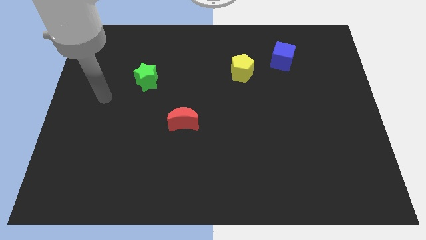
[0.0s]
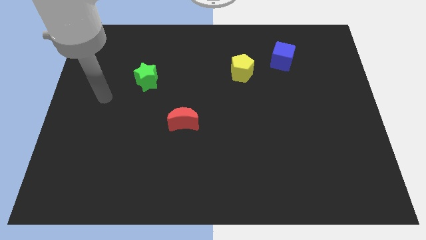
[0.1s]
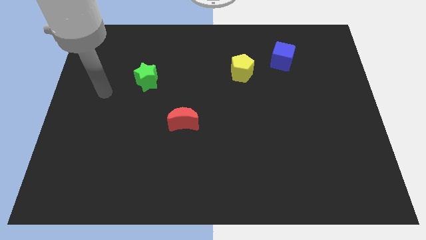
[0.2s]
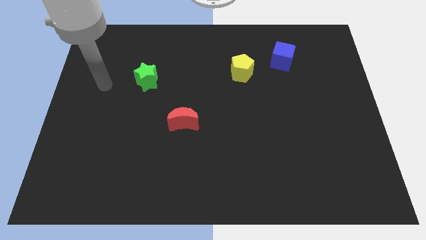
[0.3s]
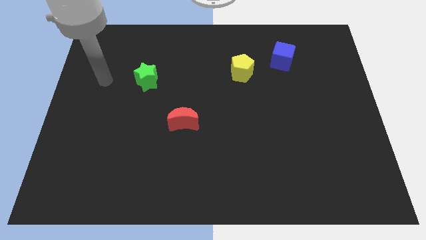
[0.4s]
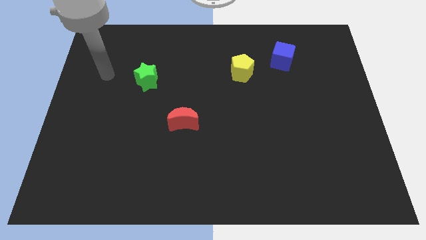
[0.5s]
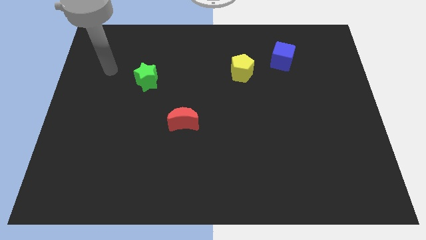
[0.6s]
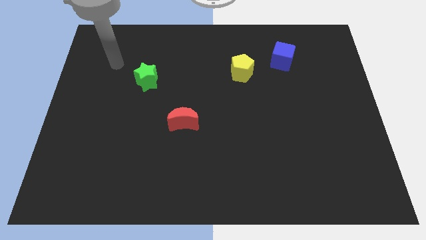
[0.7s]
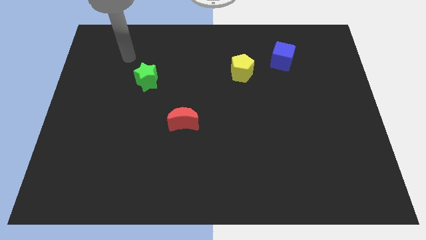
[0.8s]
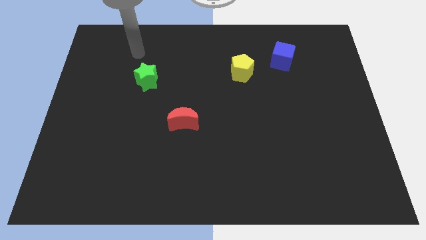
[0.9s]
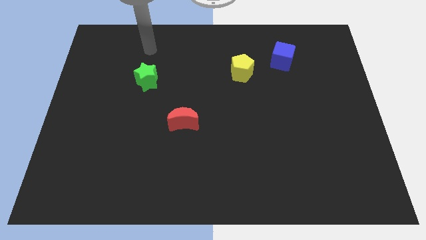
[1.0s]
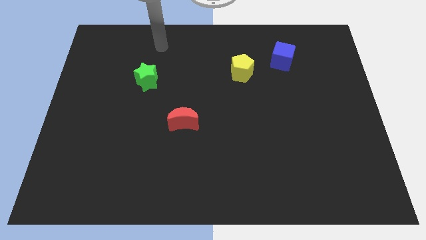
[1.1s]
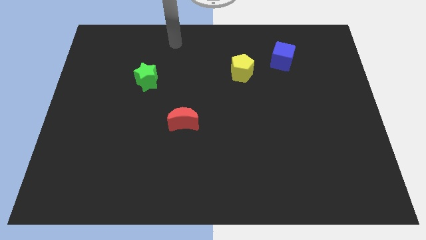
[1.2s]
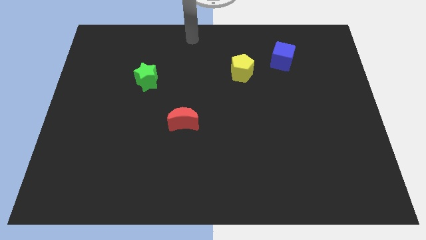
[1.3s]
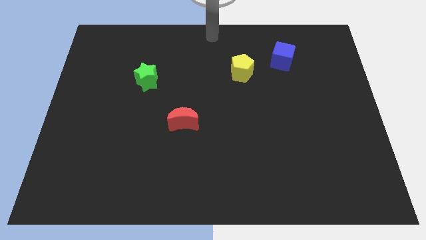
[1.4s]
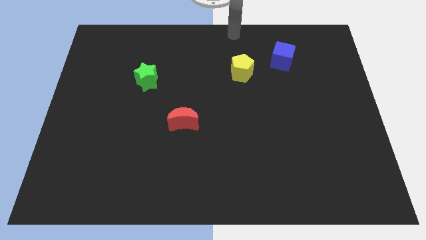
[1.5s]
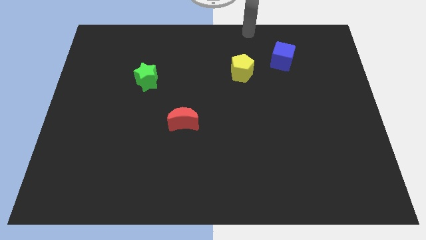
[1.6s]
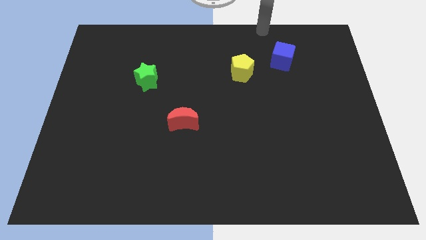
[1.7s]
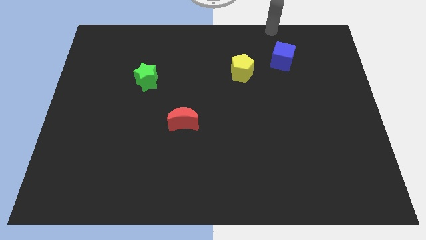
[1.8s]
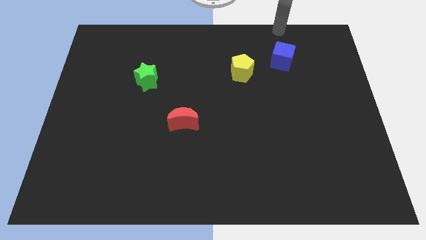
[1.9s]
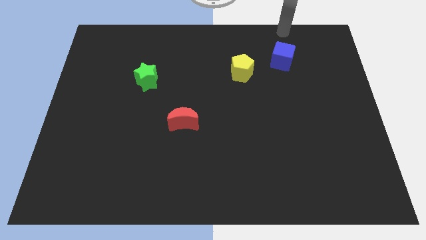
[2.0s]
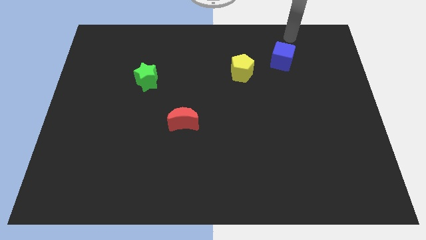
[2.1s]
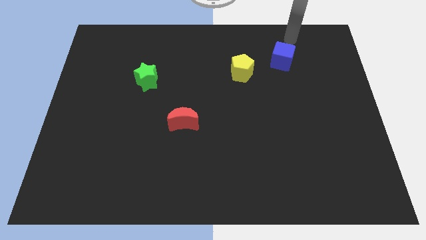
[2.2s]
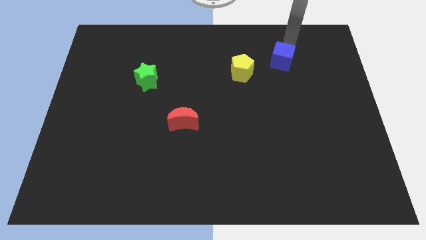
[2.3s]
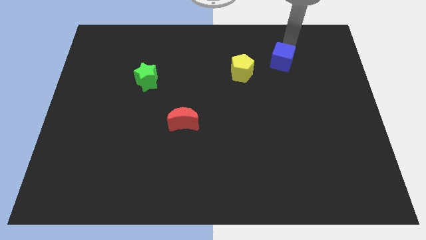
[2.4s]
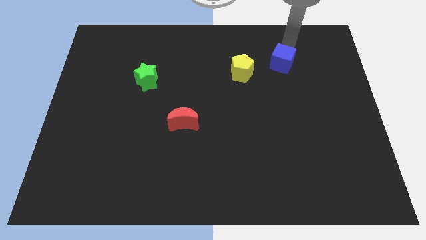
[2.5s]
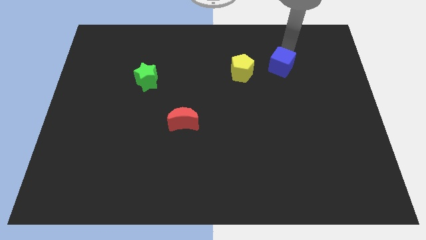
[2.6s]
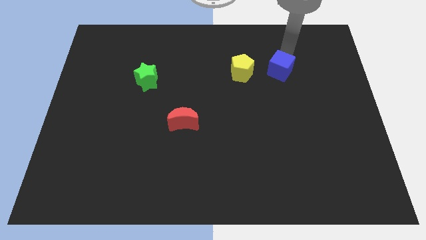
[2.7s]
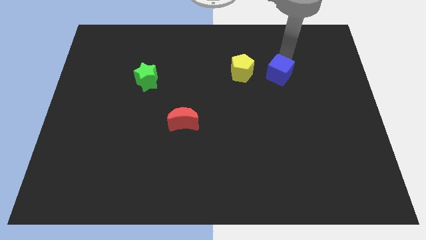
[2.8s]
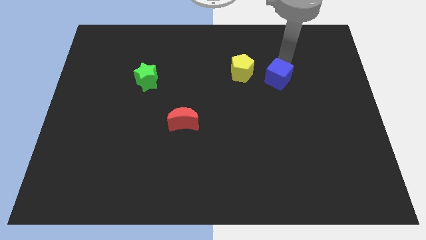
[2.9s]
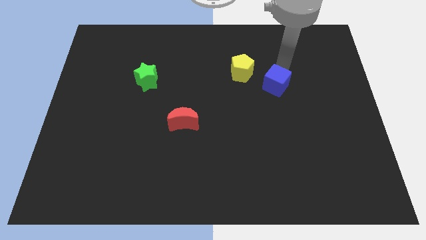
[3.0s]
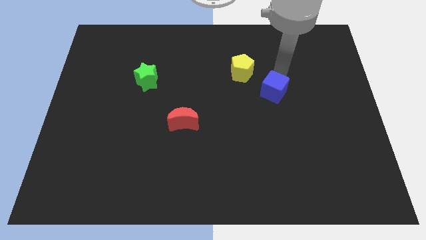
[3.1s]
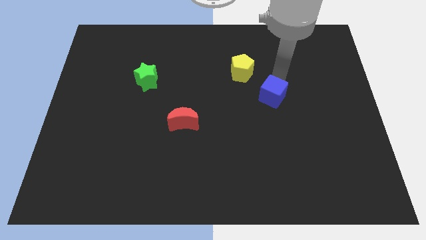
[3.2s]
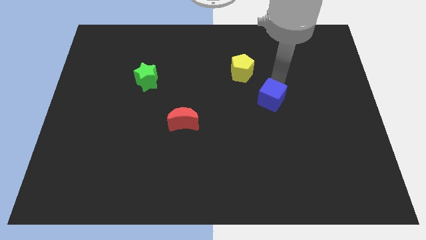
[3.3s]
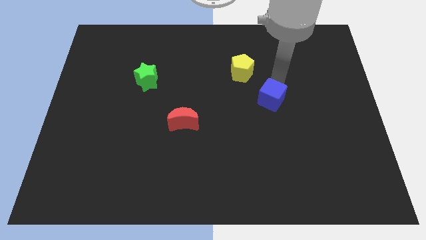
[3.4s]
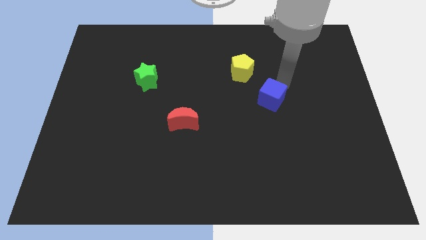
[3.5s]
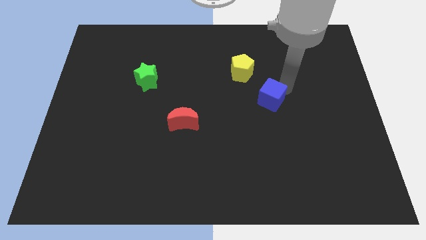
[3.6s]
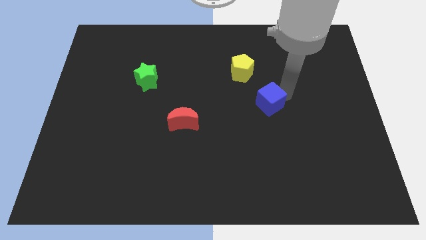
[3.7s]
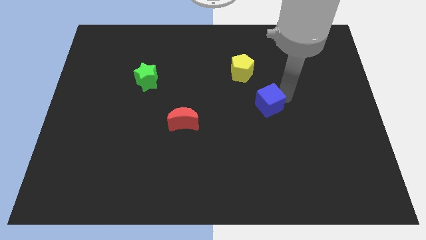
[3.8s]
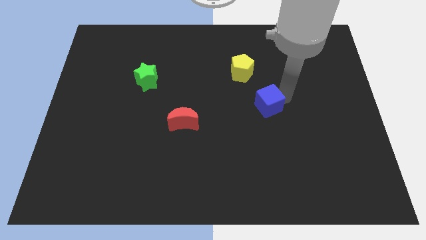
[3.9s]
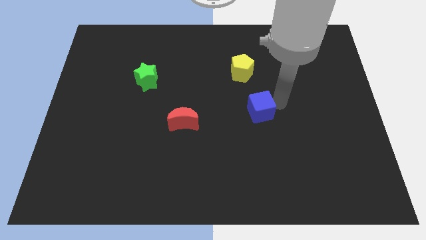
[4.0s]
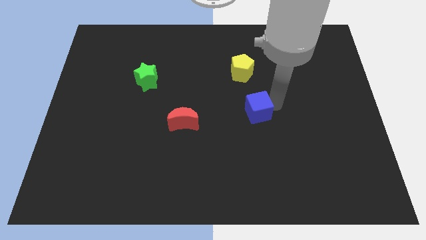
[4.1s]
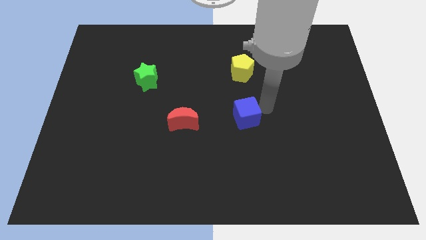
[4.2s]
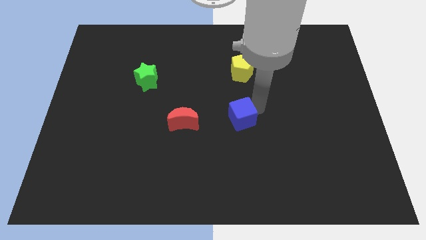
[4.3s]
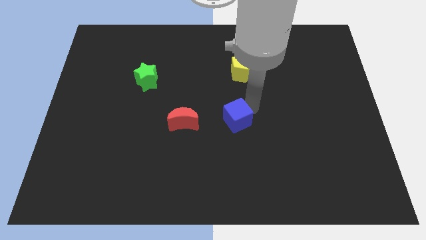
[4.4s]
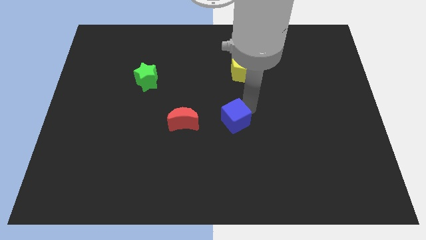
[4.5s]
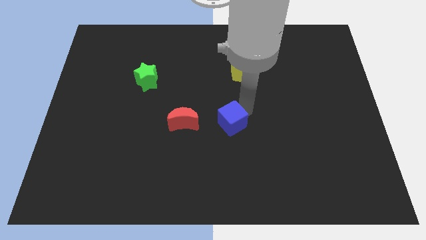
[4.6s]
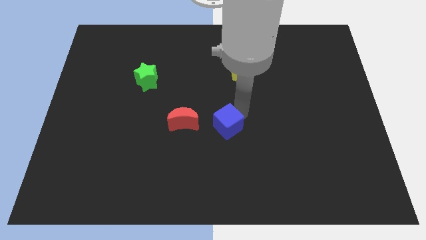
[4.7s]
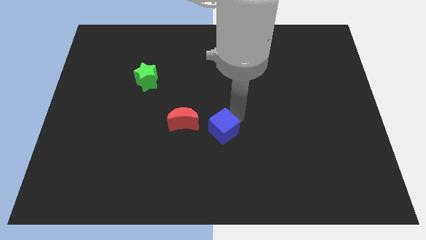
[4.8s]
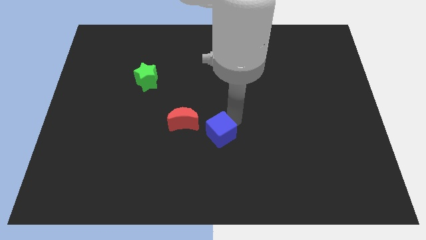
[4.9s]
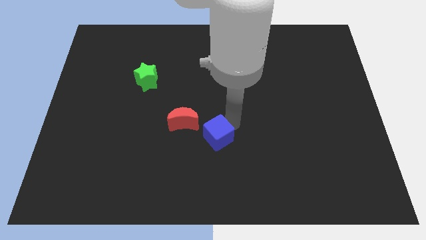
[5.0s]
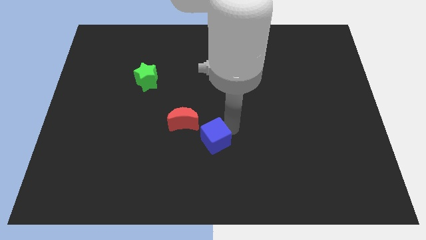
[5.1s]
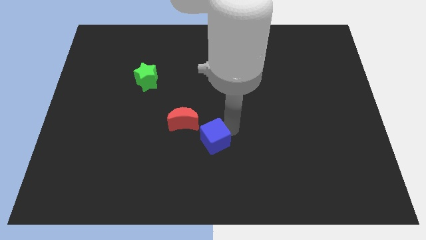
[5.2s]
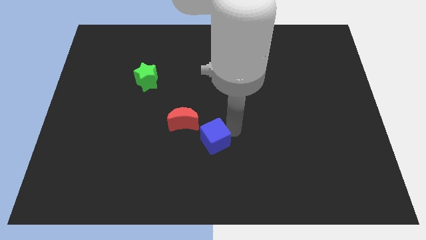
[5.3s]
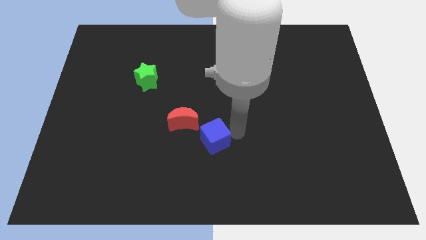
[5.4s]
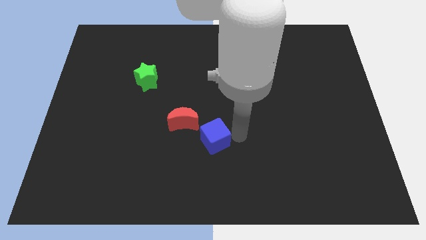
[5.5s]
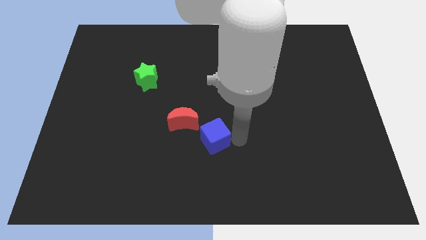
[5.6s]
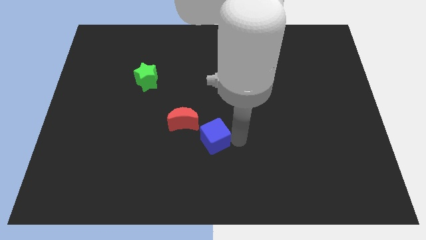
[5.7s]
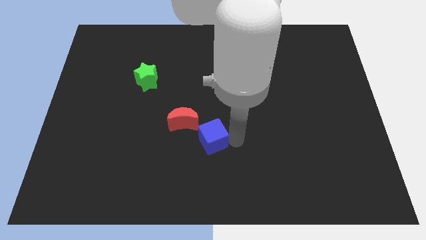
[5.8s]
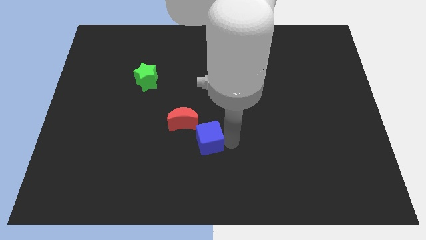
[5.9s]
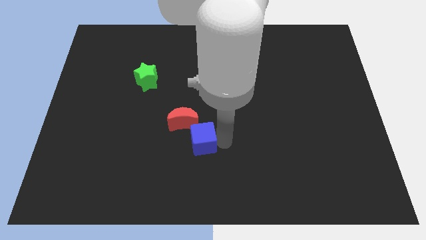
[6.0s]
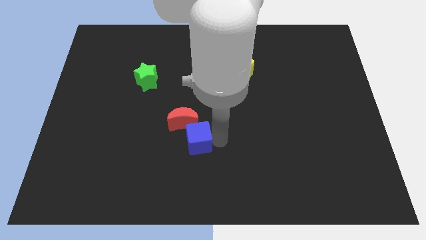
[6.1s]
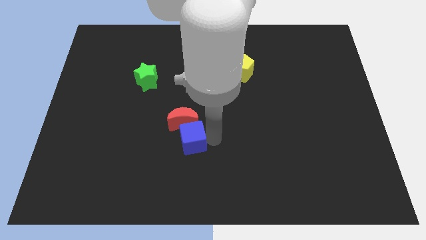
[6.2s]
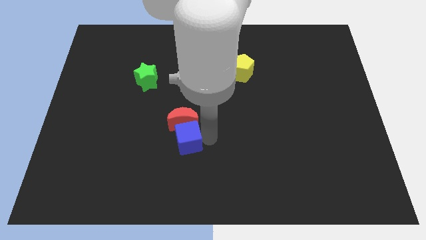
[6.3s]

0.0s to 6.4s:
slide the blue block to the moon

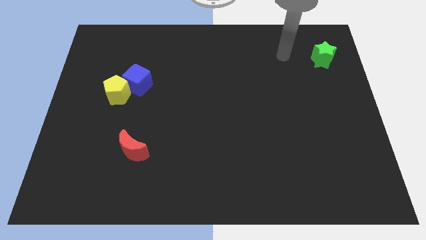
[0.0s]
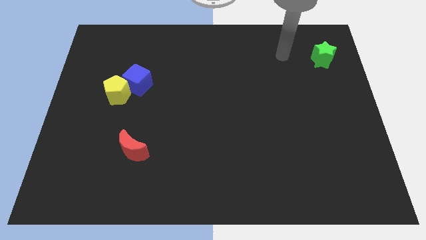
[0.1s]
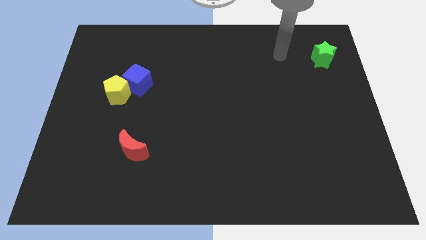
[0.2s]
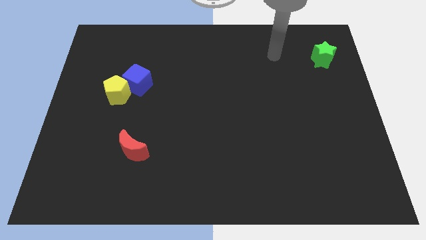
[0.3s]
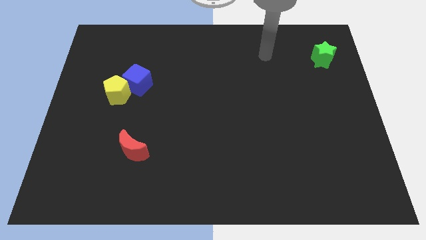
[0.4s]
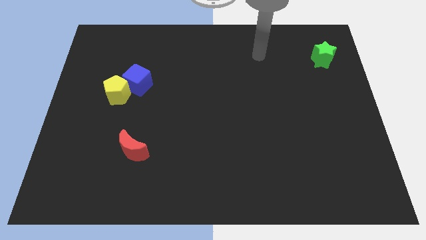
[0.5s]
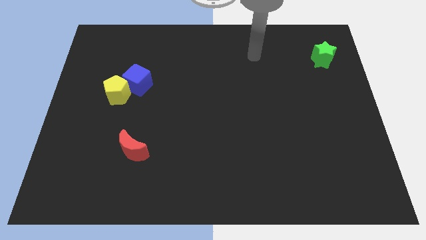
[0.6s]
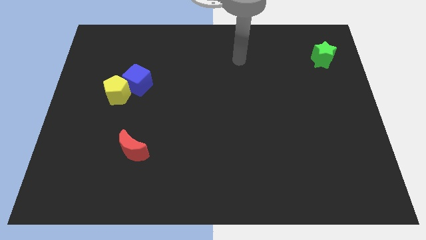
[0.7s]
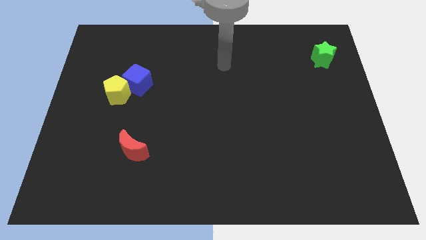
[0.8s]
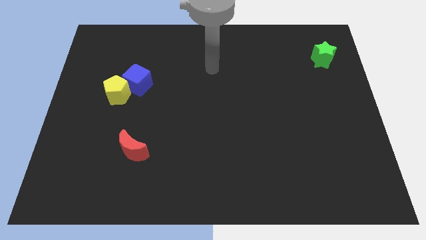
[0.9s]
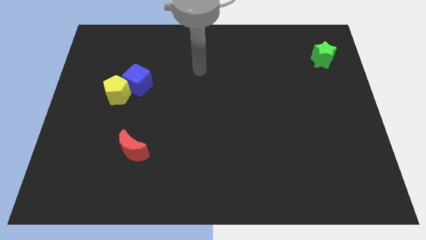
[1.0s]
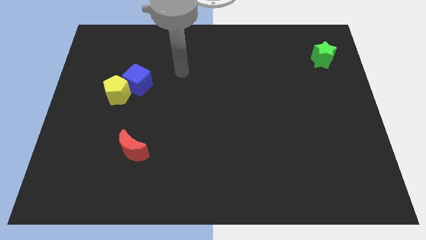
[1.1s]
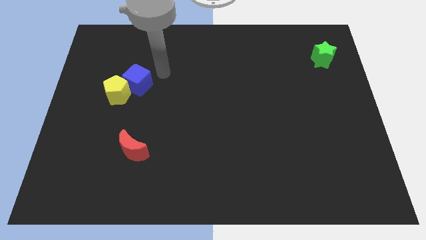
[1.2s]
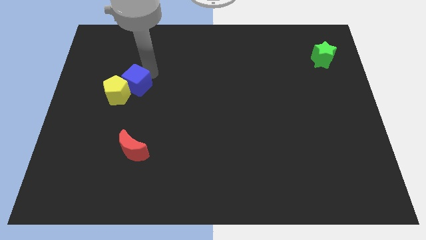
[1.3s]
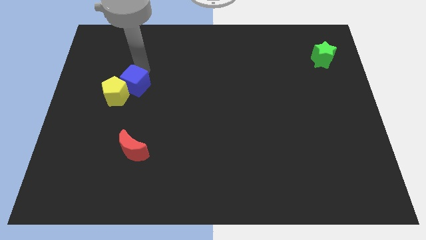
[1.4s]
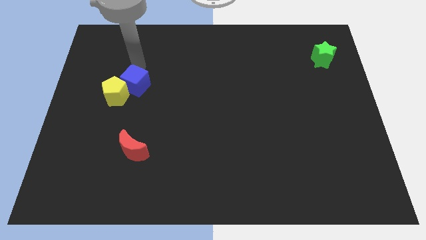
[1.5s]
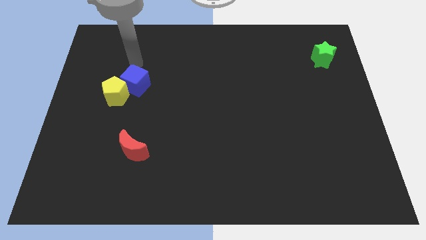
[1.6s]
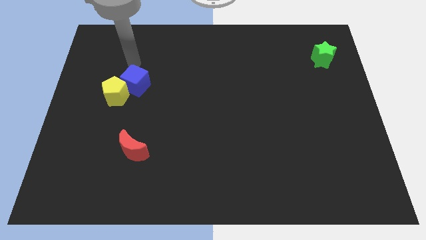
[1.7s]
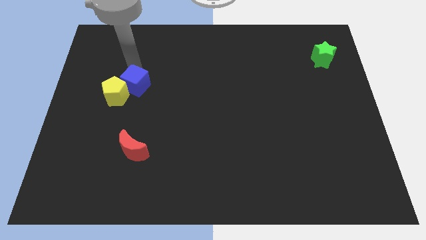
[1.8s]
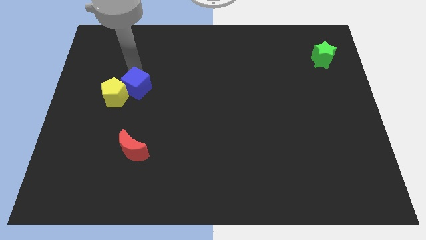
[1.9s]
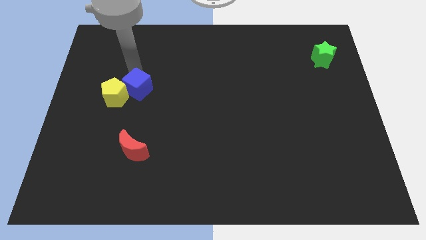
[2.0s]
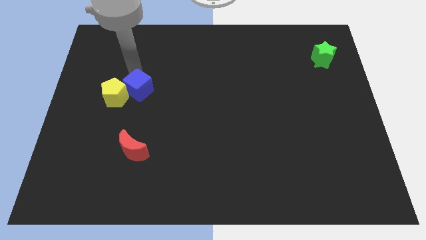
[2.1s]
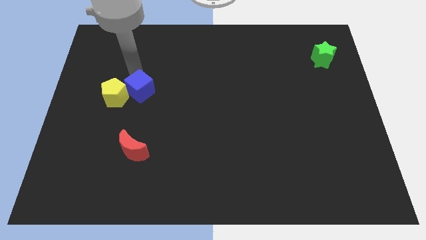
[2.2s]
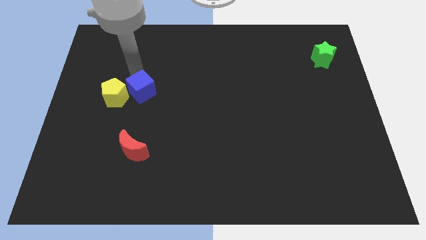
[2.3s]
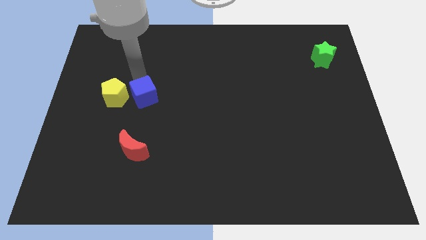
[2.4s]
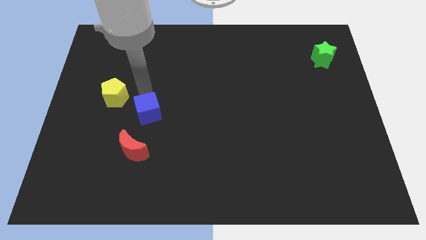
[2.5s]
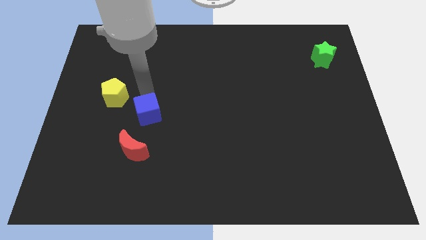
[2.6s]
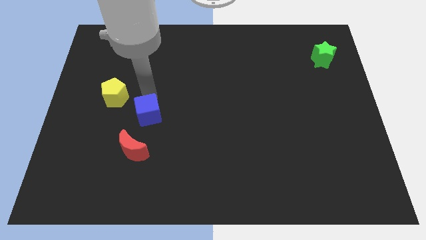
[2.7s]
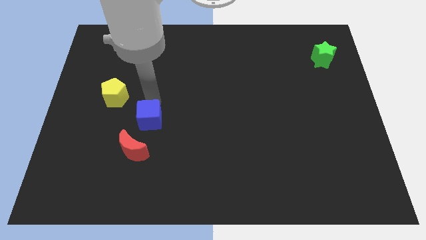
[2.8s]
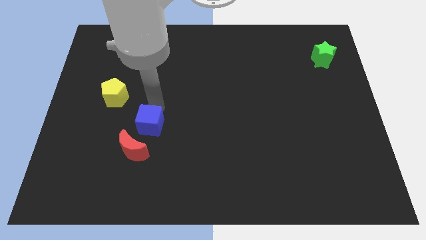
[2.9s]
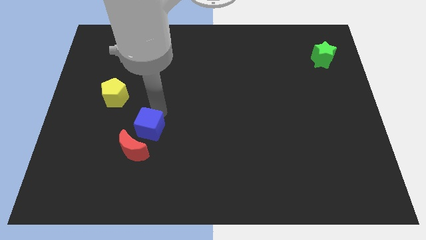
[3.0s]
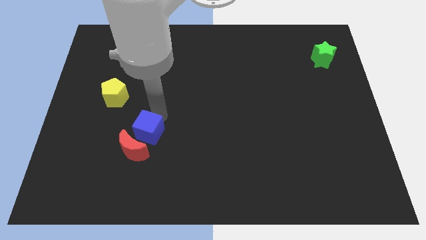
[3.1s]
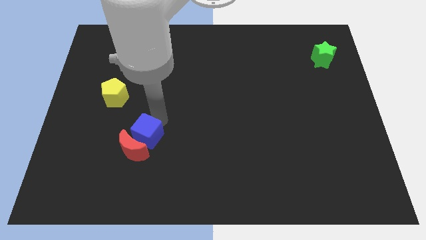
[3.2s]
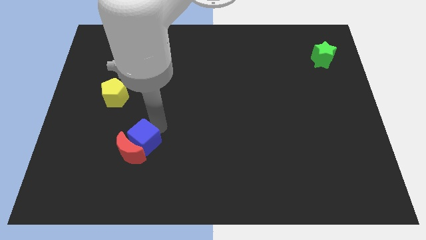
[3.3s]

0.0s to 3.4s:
slide the blue cube next to the moon
